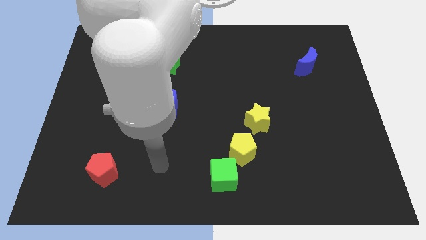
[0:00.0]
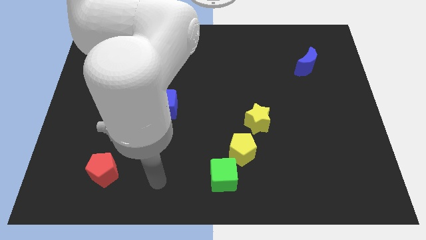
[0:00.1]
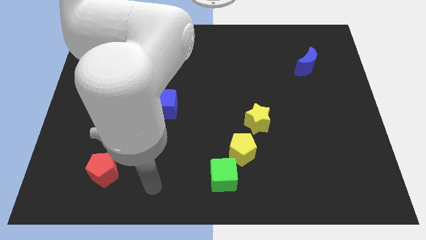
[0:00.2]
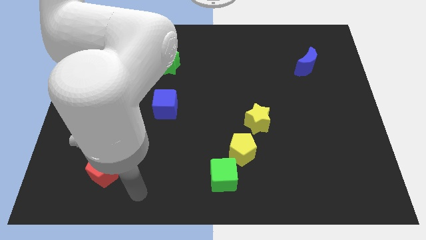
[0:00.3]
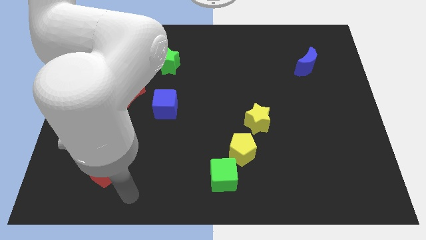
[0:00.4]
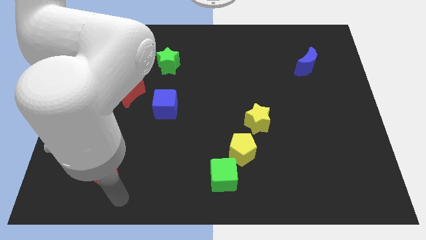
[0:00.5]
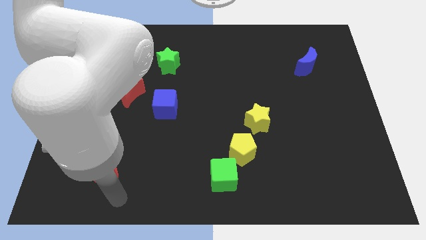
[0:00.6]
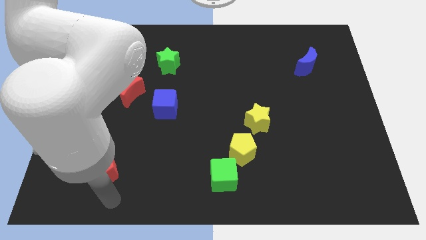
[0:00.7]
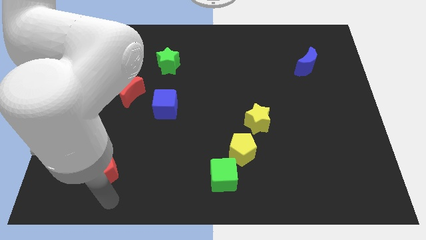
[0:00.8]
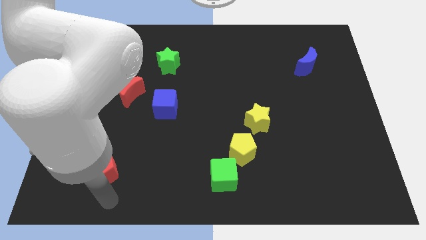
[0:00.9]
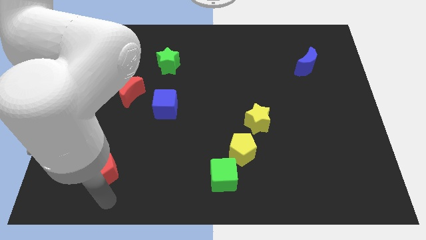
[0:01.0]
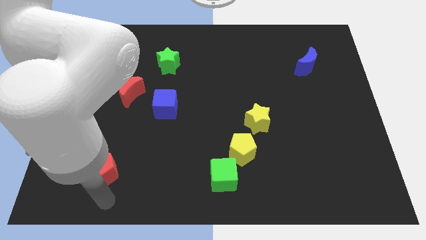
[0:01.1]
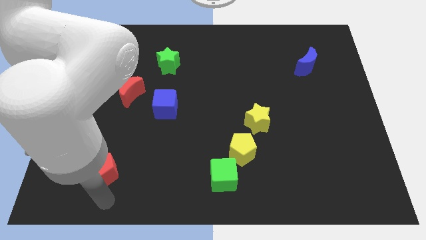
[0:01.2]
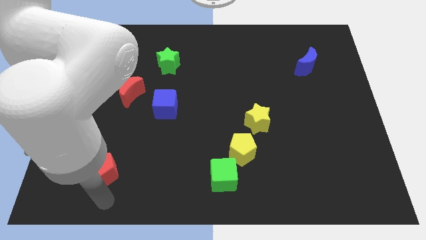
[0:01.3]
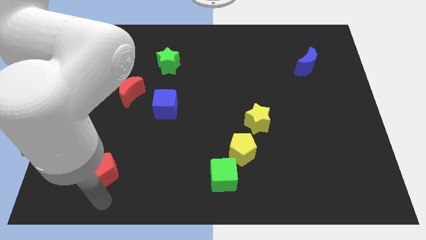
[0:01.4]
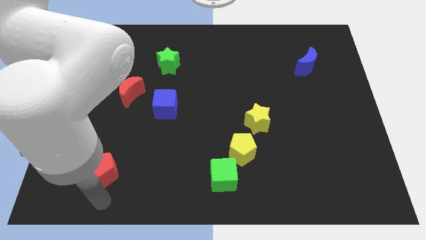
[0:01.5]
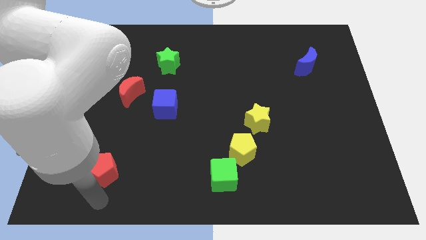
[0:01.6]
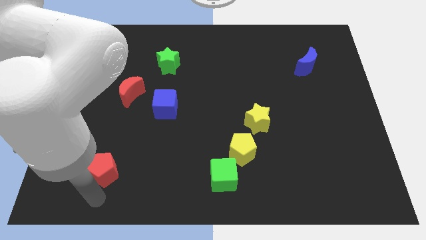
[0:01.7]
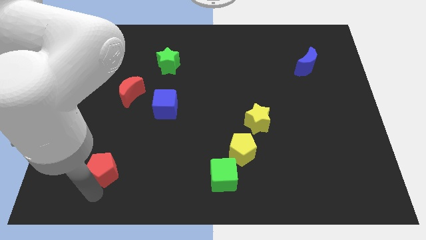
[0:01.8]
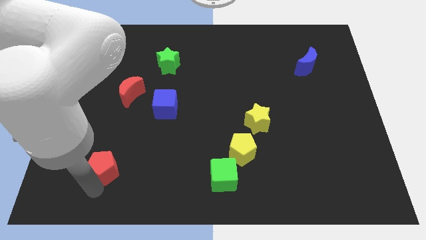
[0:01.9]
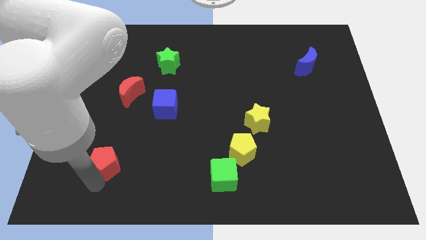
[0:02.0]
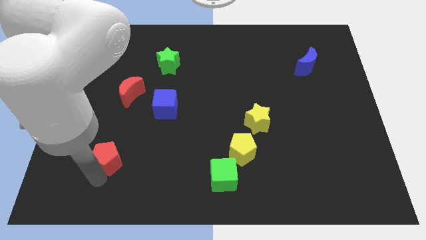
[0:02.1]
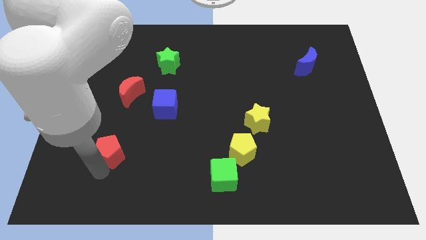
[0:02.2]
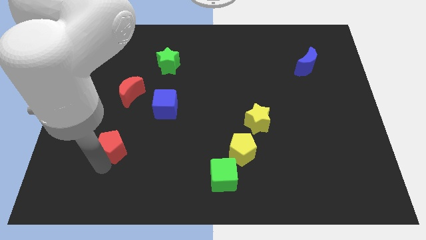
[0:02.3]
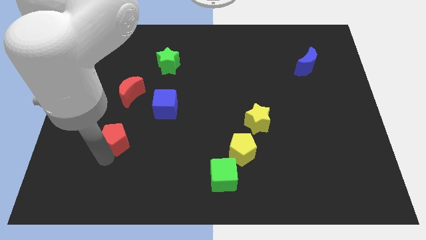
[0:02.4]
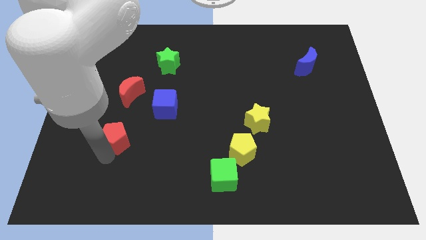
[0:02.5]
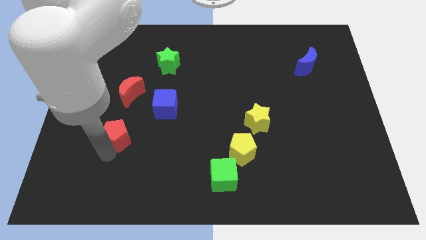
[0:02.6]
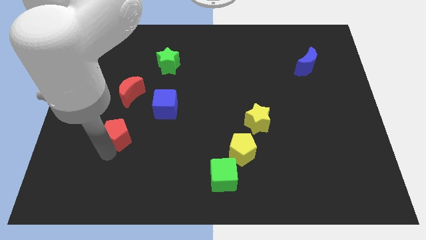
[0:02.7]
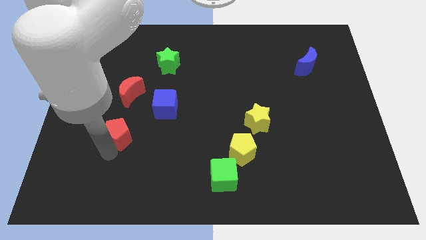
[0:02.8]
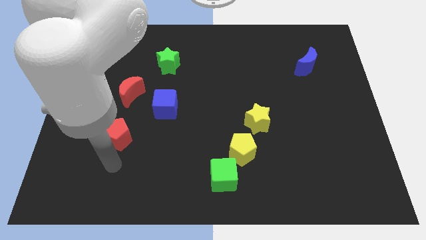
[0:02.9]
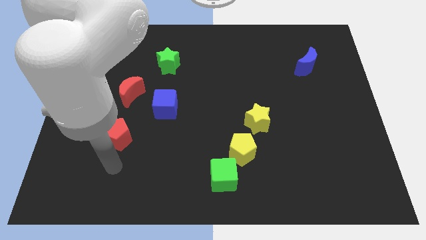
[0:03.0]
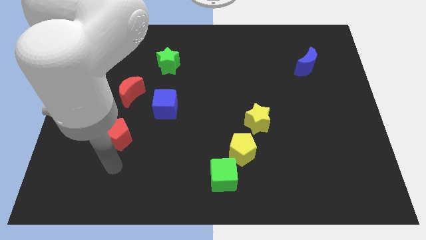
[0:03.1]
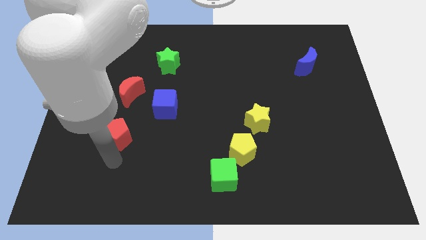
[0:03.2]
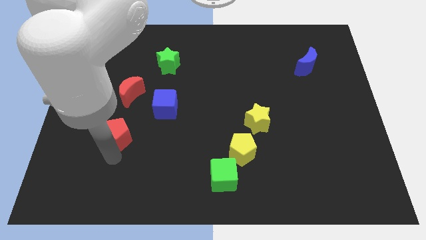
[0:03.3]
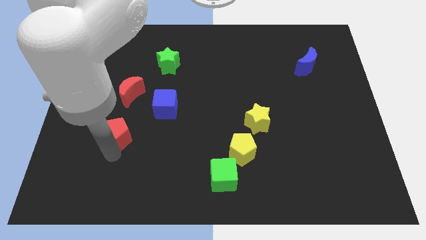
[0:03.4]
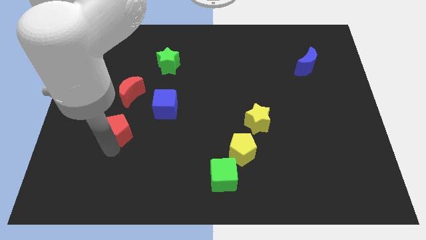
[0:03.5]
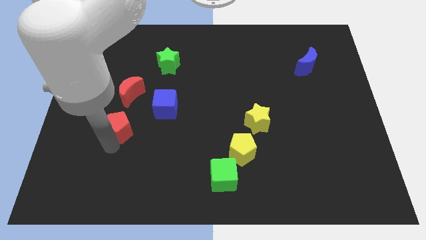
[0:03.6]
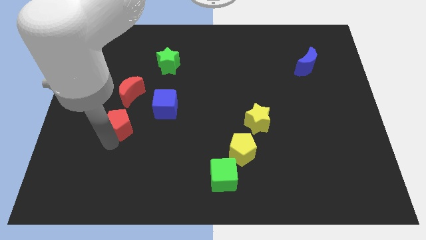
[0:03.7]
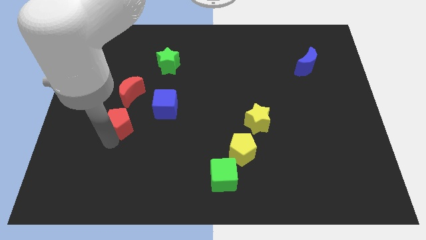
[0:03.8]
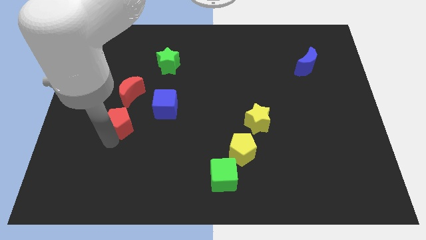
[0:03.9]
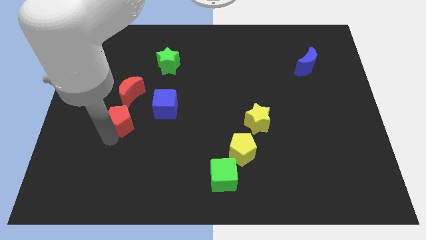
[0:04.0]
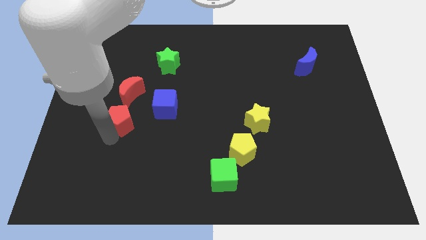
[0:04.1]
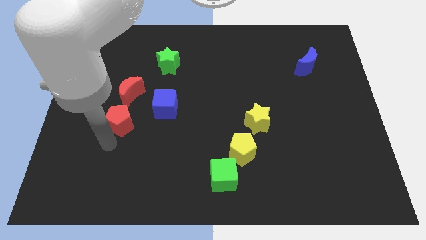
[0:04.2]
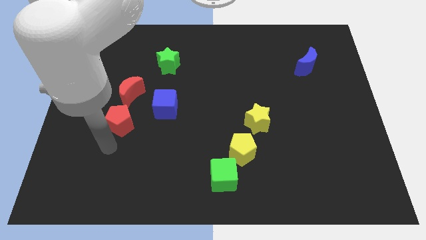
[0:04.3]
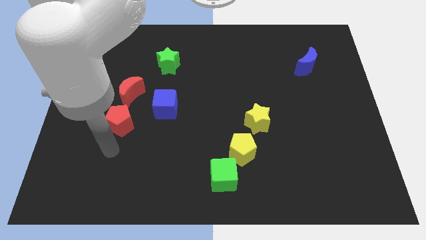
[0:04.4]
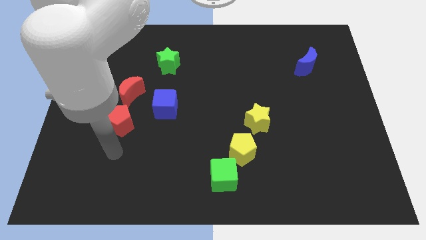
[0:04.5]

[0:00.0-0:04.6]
push the red pentagon to the bottom side of the red crescent

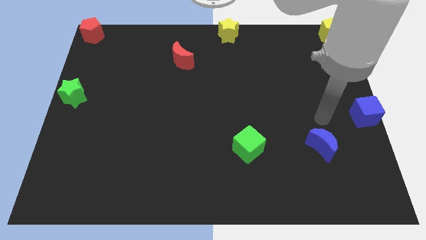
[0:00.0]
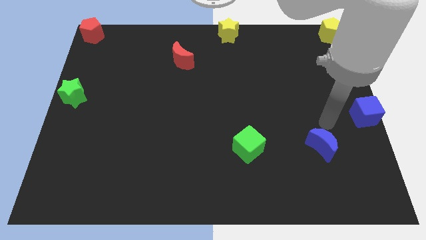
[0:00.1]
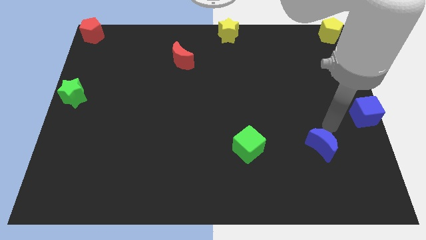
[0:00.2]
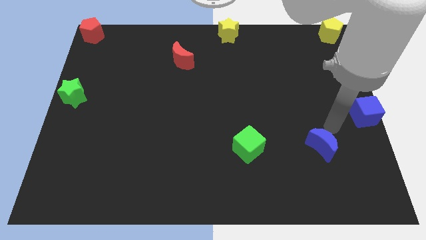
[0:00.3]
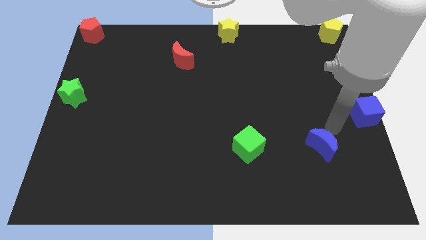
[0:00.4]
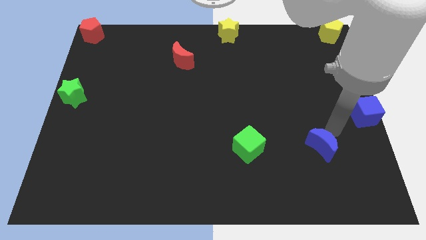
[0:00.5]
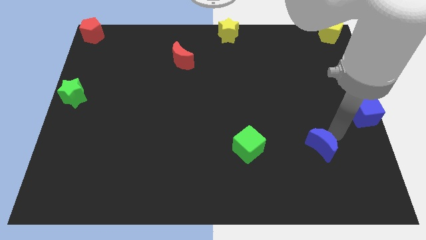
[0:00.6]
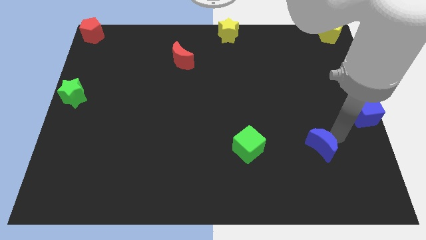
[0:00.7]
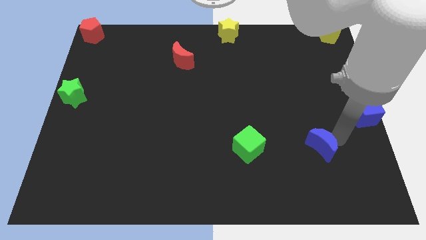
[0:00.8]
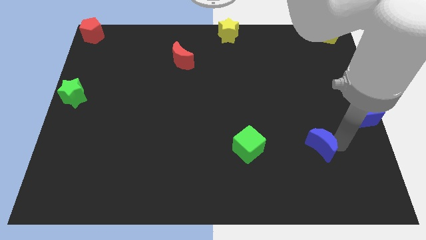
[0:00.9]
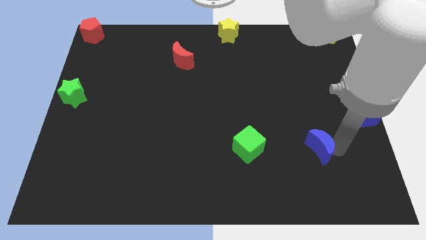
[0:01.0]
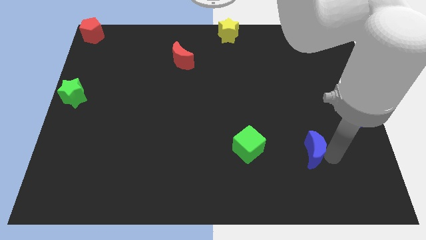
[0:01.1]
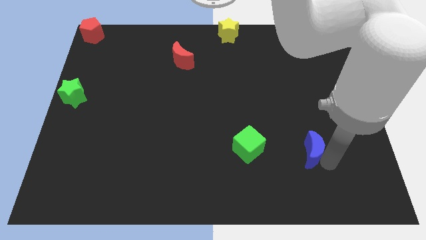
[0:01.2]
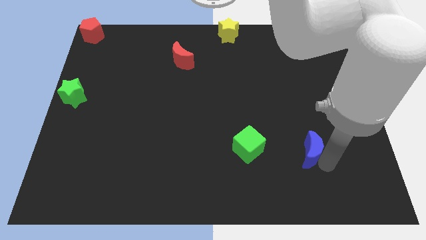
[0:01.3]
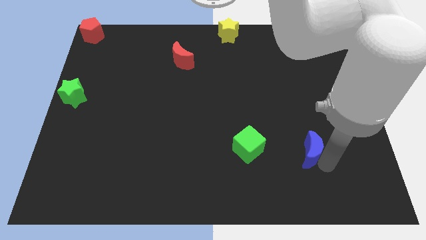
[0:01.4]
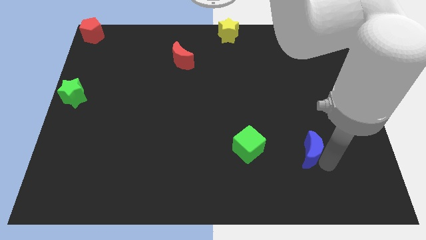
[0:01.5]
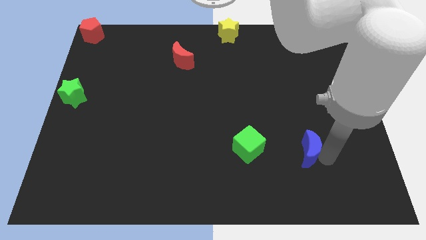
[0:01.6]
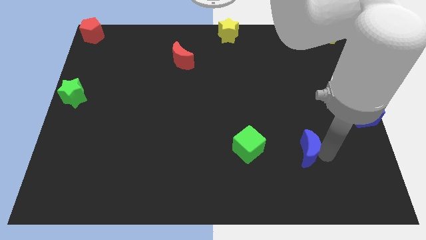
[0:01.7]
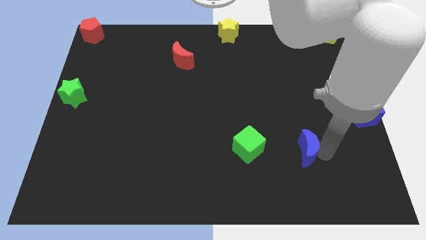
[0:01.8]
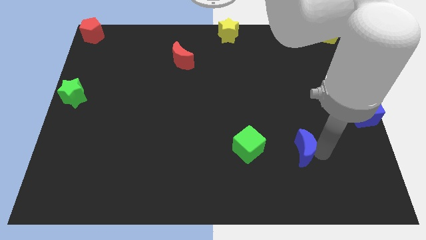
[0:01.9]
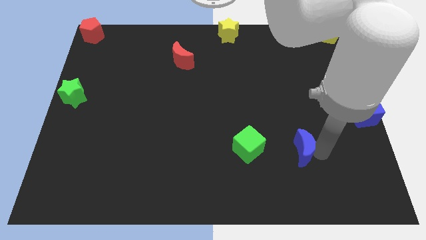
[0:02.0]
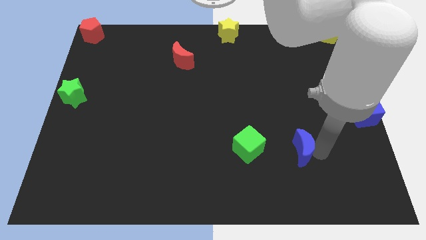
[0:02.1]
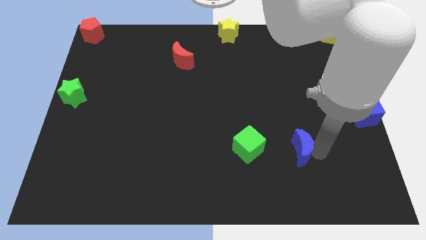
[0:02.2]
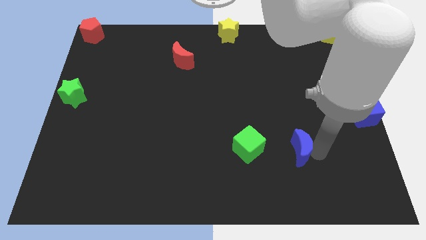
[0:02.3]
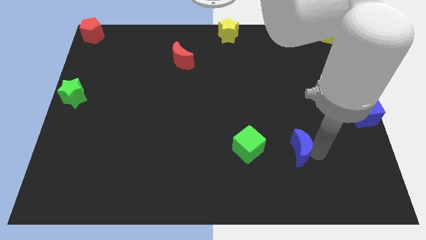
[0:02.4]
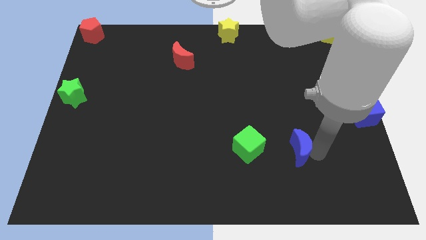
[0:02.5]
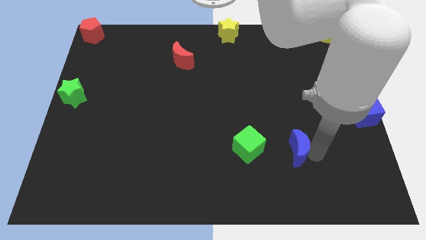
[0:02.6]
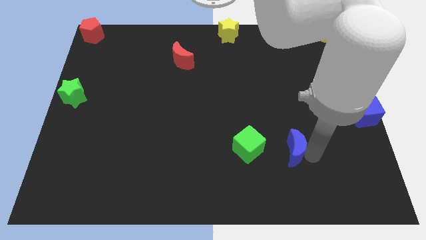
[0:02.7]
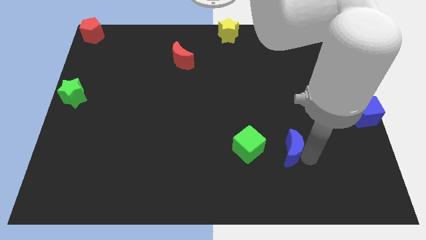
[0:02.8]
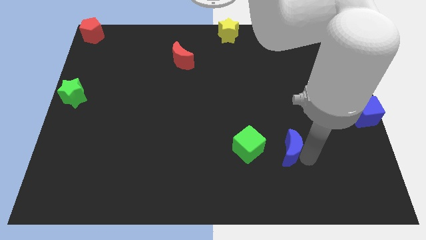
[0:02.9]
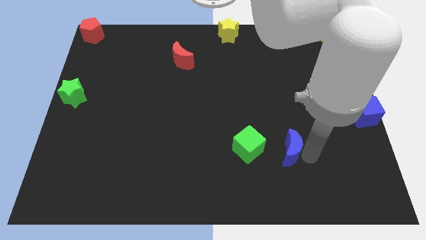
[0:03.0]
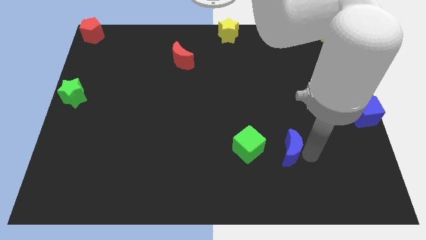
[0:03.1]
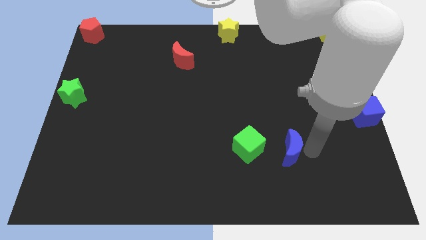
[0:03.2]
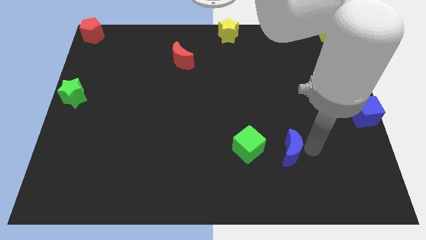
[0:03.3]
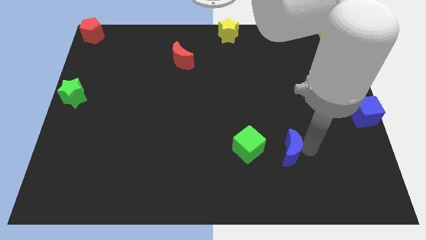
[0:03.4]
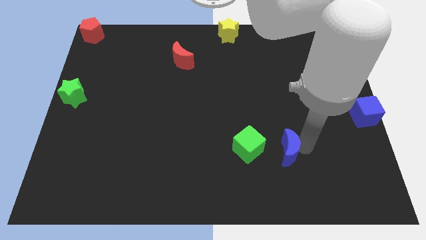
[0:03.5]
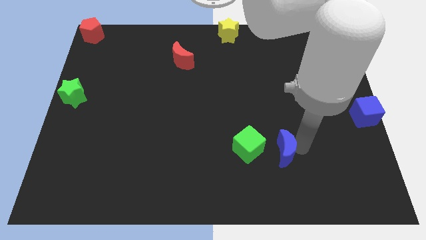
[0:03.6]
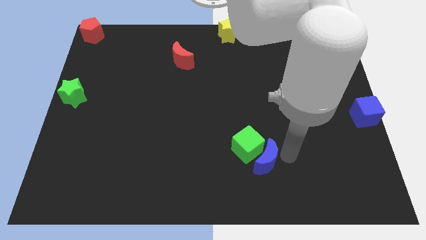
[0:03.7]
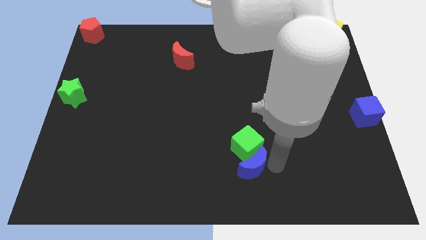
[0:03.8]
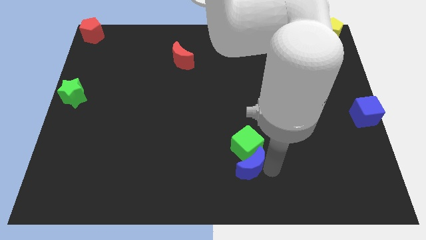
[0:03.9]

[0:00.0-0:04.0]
push the blue moon into the green cube

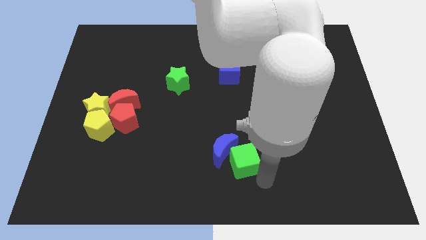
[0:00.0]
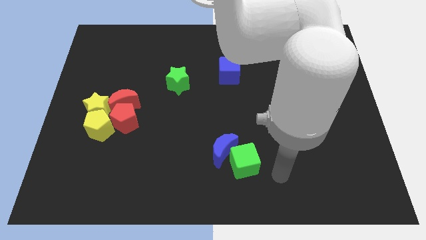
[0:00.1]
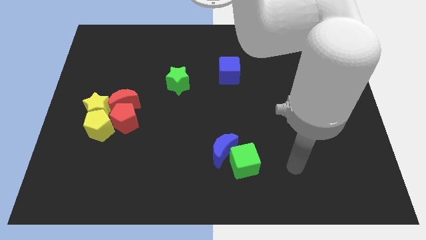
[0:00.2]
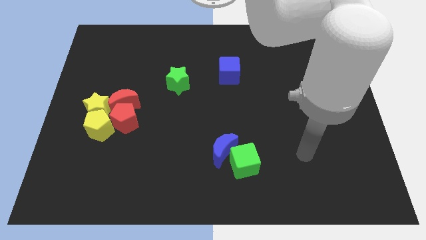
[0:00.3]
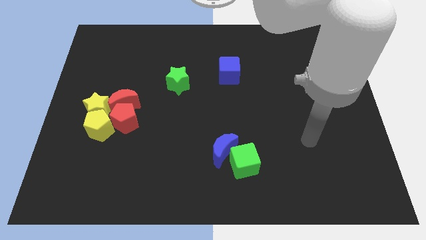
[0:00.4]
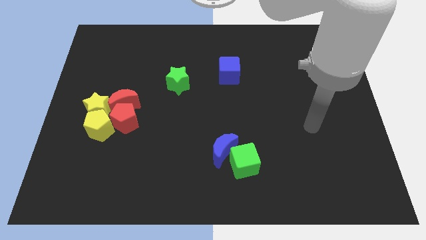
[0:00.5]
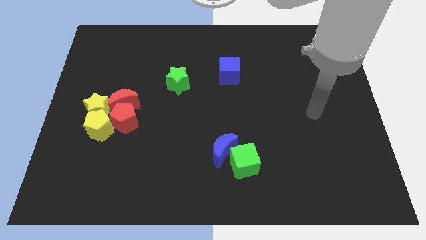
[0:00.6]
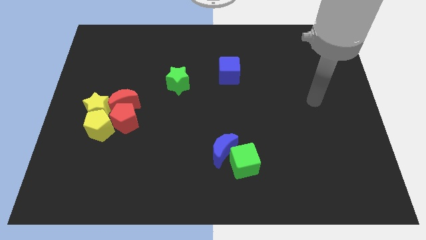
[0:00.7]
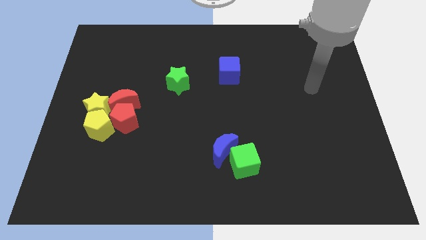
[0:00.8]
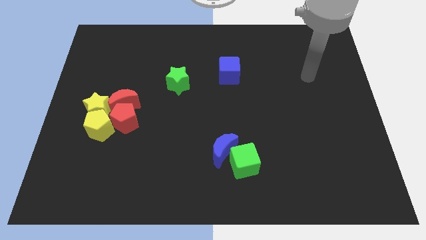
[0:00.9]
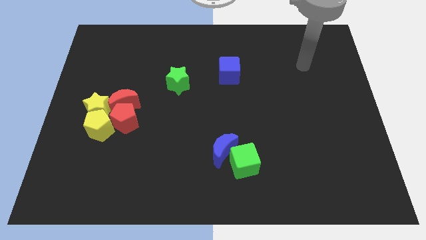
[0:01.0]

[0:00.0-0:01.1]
go away from the green cube
